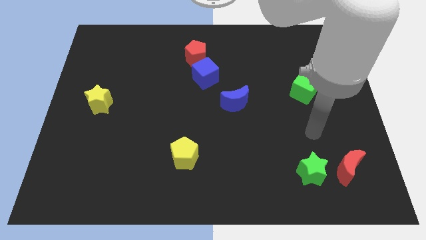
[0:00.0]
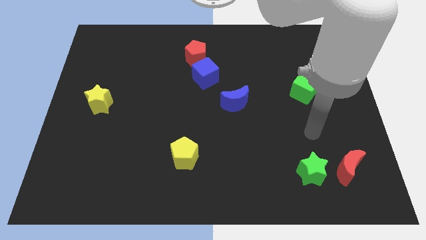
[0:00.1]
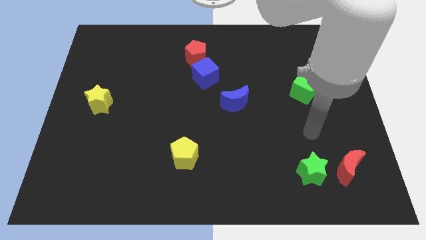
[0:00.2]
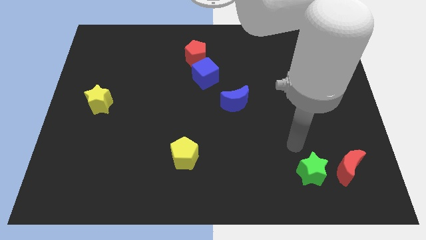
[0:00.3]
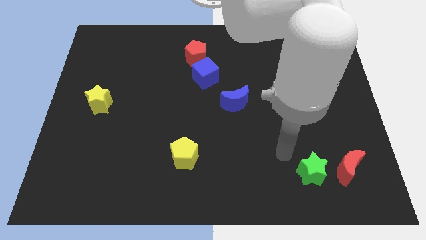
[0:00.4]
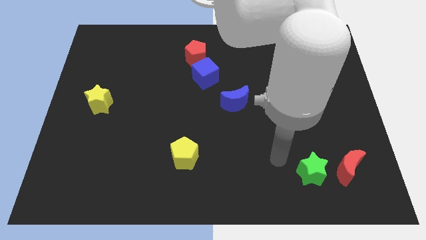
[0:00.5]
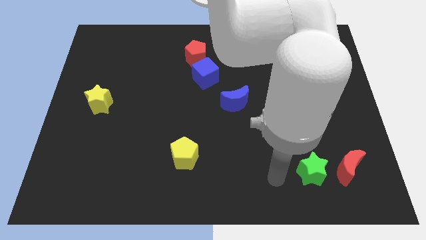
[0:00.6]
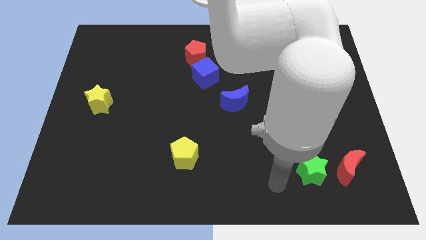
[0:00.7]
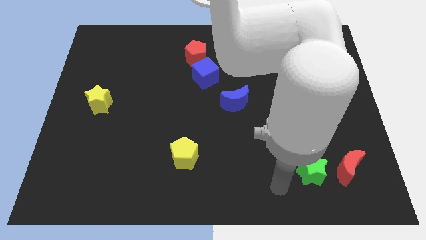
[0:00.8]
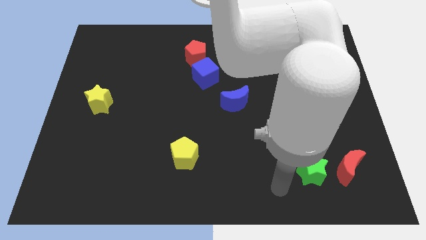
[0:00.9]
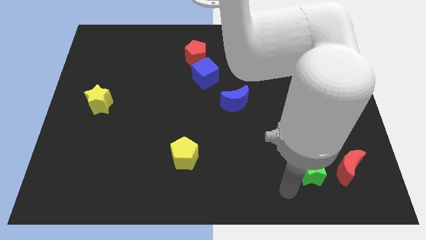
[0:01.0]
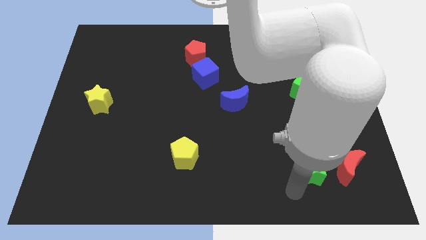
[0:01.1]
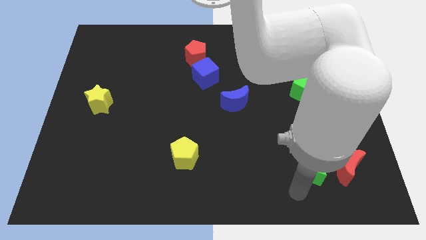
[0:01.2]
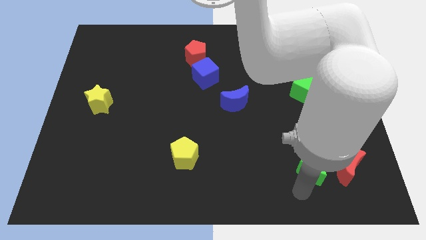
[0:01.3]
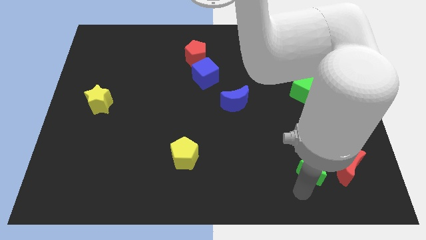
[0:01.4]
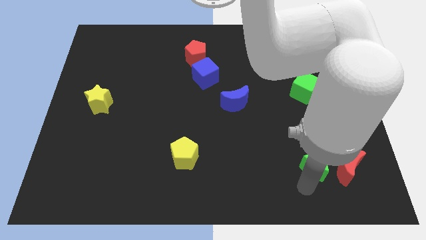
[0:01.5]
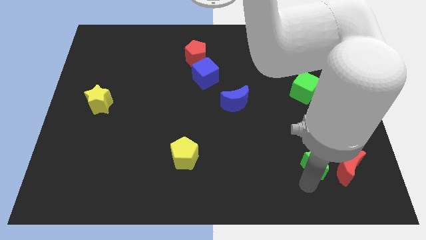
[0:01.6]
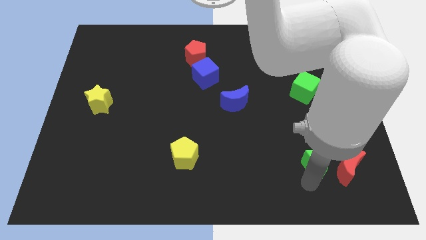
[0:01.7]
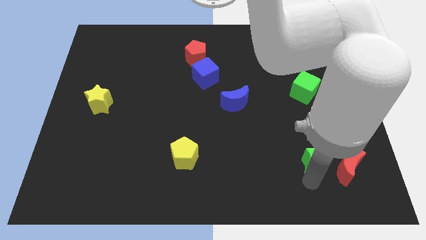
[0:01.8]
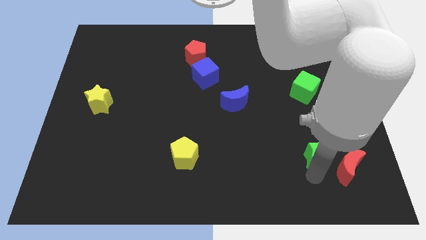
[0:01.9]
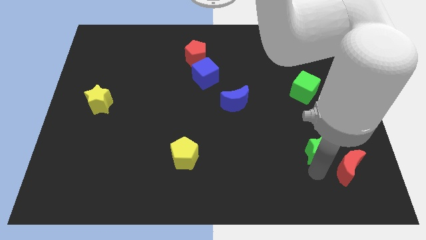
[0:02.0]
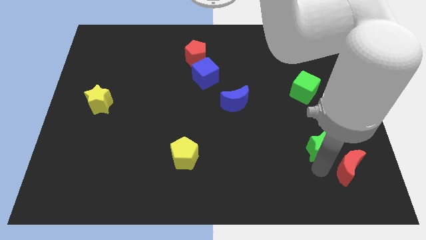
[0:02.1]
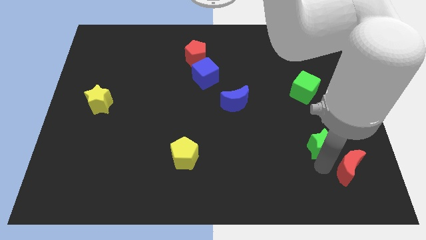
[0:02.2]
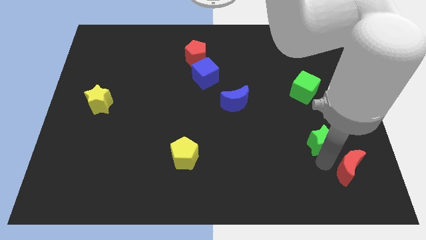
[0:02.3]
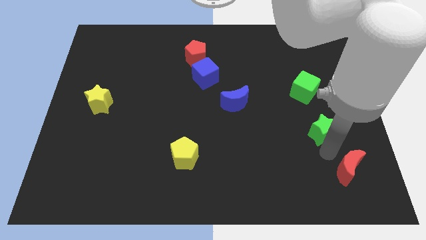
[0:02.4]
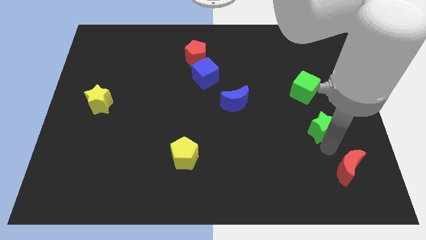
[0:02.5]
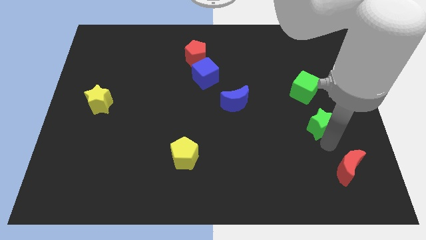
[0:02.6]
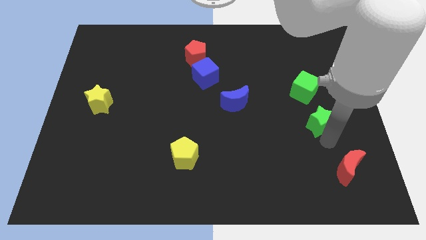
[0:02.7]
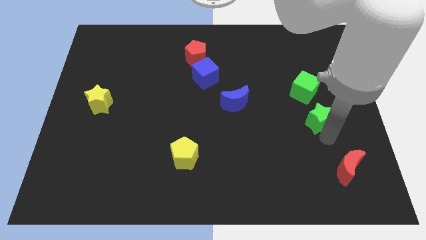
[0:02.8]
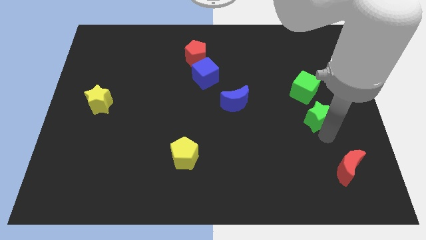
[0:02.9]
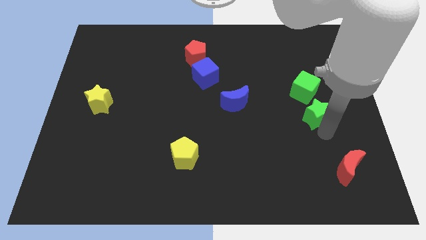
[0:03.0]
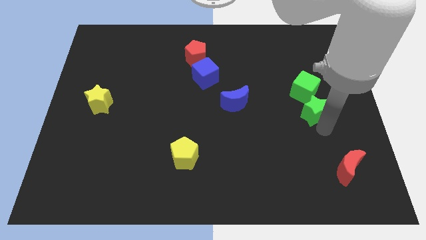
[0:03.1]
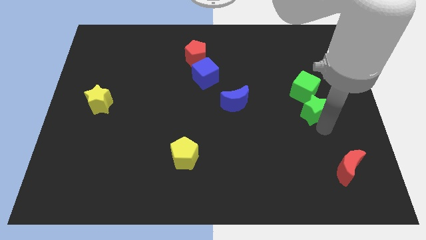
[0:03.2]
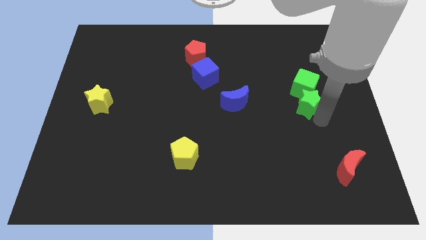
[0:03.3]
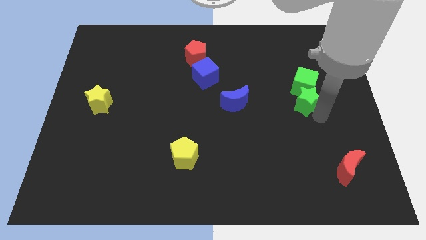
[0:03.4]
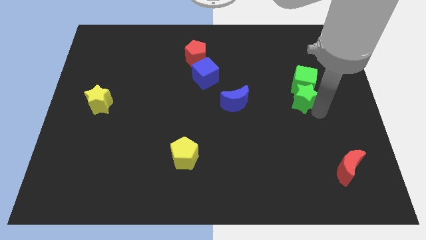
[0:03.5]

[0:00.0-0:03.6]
move the green star close to the green cube

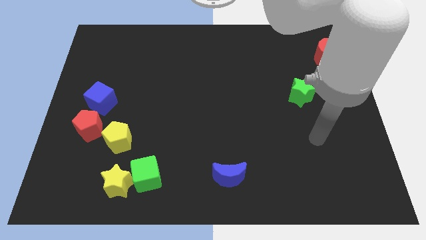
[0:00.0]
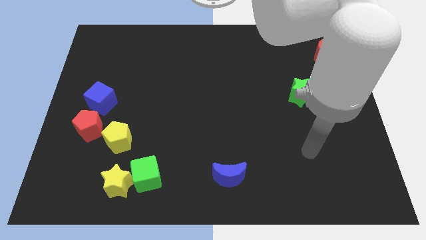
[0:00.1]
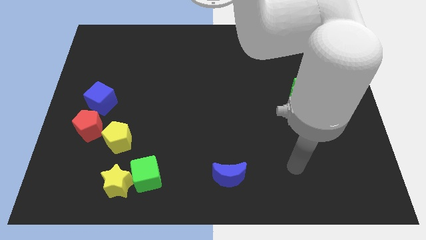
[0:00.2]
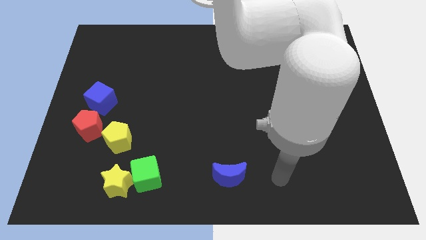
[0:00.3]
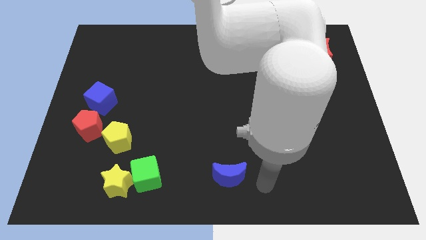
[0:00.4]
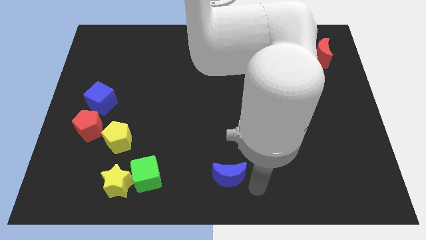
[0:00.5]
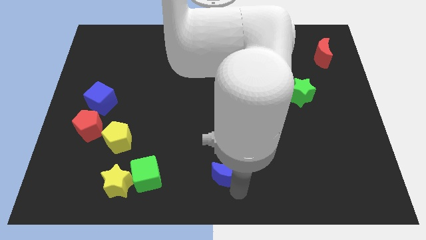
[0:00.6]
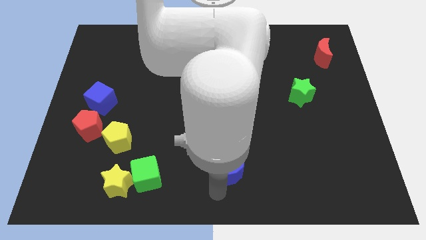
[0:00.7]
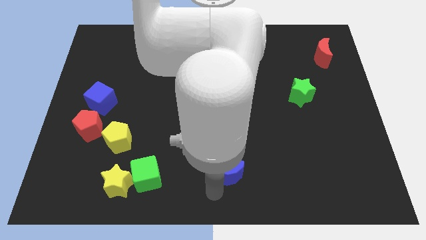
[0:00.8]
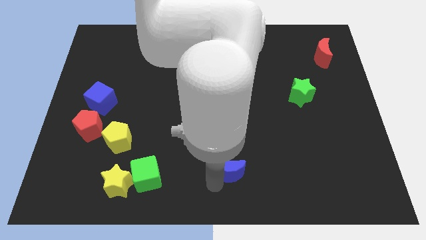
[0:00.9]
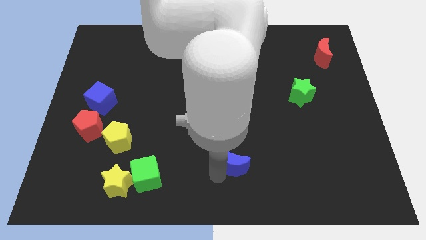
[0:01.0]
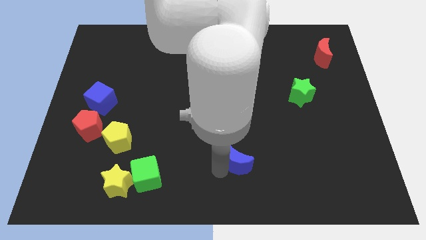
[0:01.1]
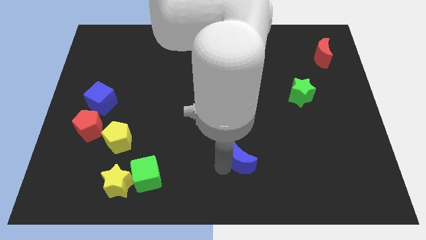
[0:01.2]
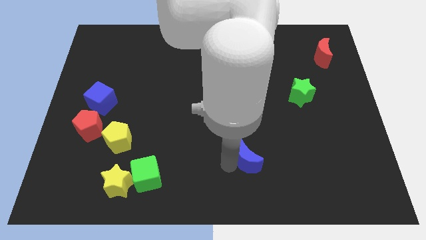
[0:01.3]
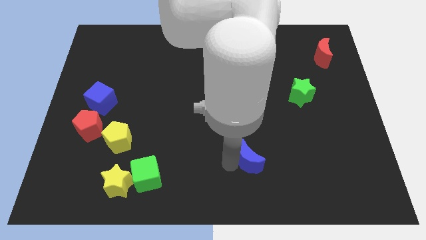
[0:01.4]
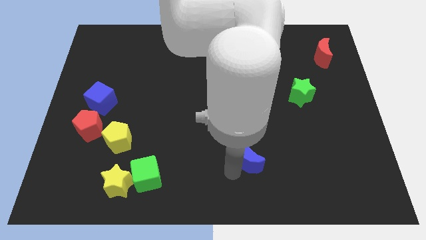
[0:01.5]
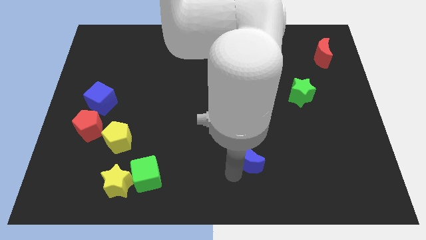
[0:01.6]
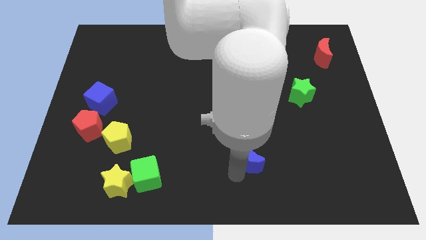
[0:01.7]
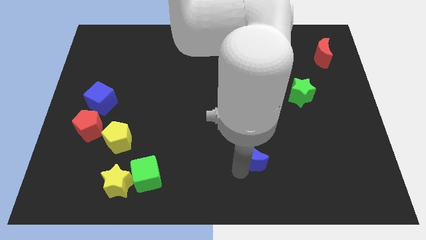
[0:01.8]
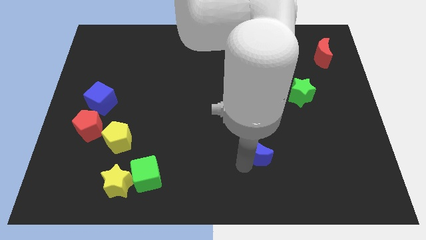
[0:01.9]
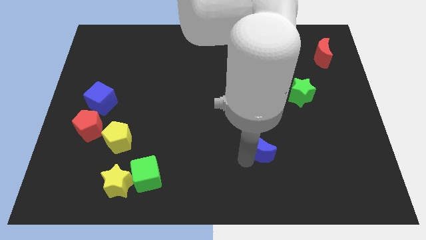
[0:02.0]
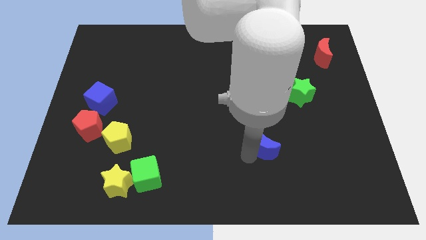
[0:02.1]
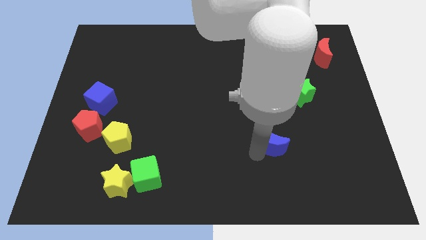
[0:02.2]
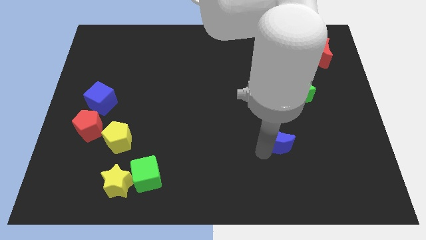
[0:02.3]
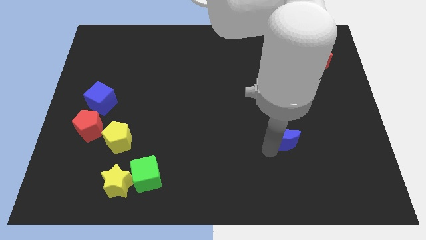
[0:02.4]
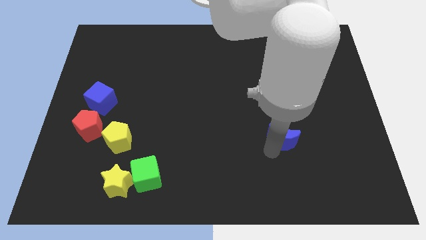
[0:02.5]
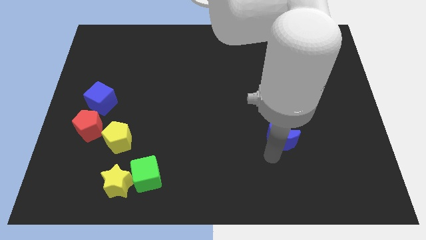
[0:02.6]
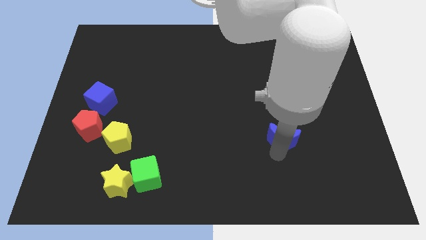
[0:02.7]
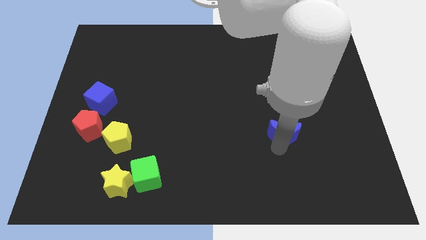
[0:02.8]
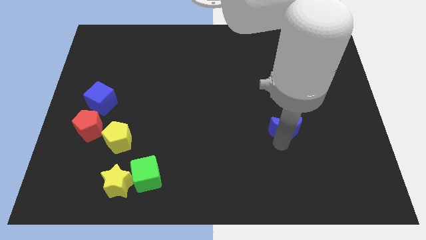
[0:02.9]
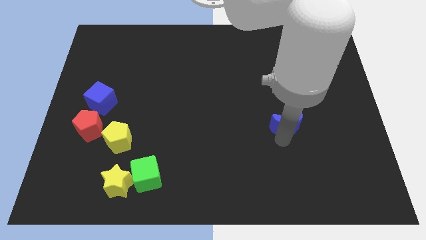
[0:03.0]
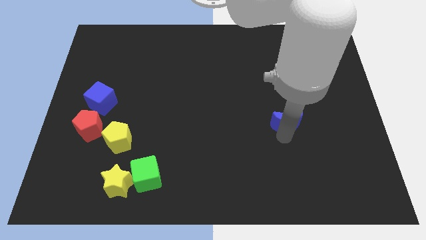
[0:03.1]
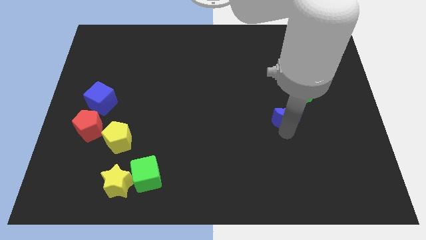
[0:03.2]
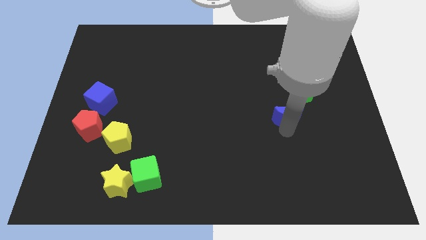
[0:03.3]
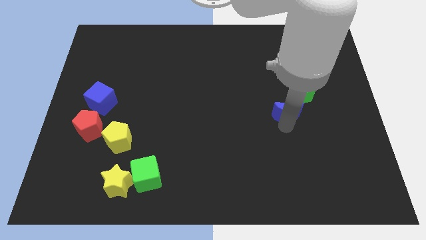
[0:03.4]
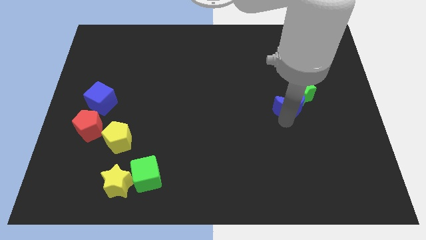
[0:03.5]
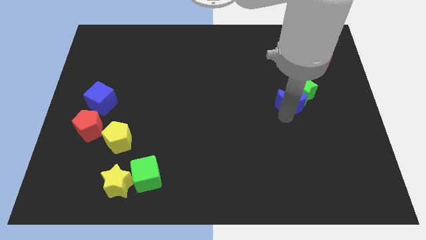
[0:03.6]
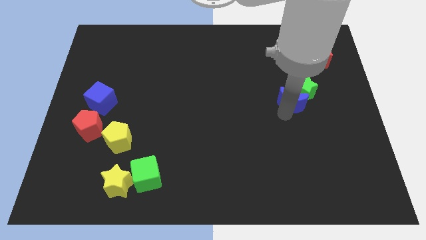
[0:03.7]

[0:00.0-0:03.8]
push the blue moon towards the green star

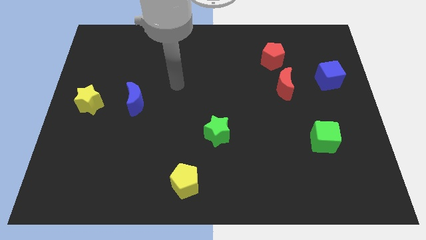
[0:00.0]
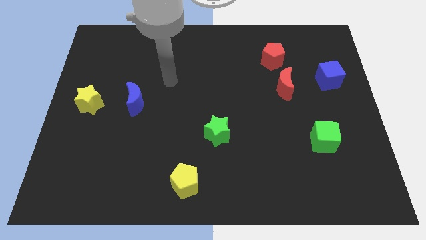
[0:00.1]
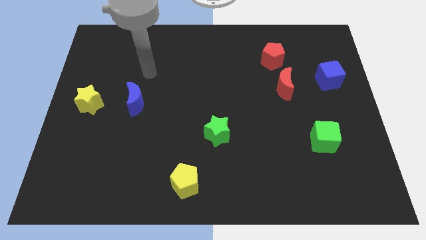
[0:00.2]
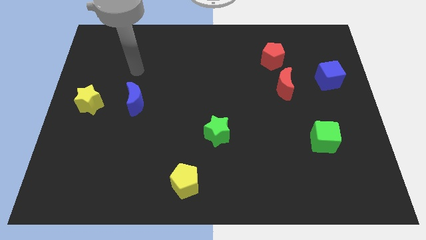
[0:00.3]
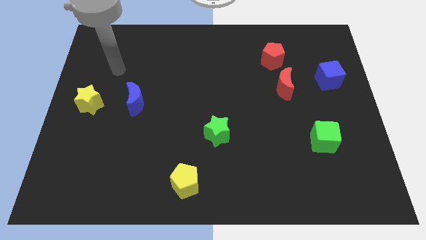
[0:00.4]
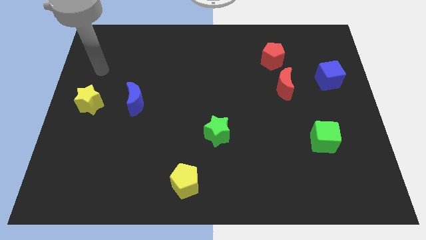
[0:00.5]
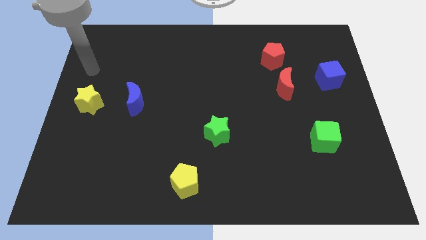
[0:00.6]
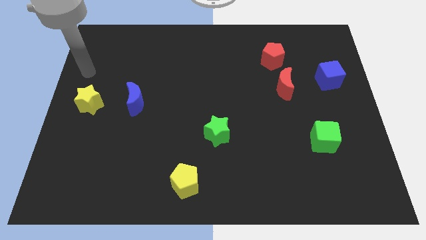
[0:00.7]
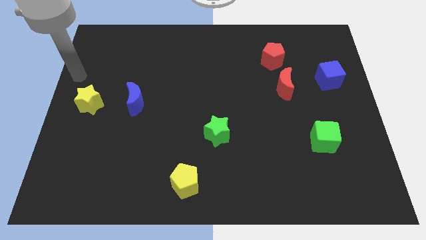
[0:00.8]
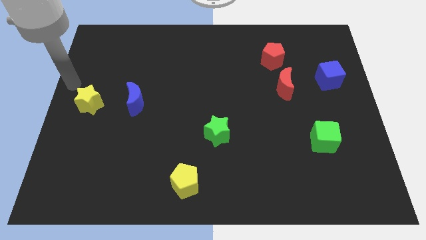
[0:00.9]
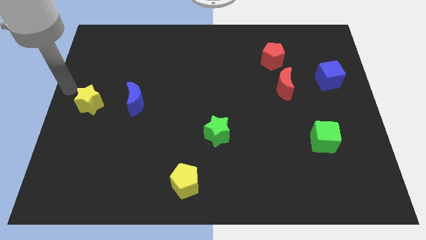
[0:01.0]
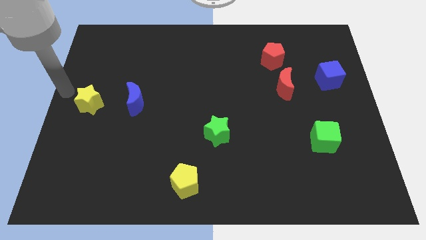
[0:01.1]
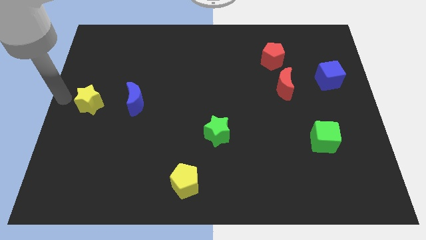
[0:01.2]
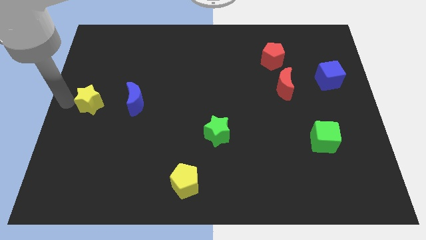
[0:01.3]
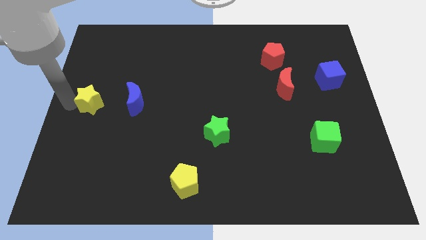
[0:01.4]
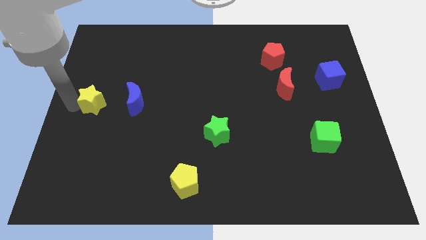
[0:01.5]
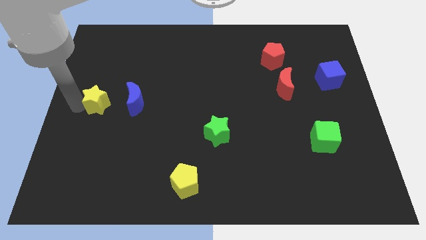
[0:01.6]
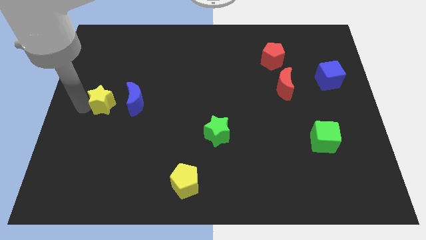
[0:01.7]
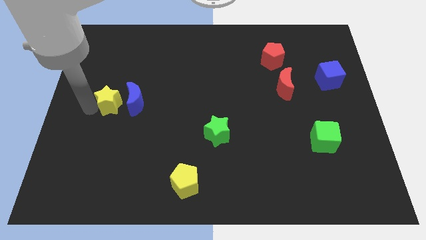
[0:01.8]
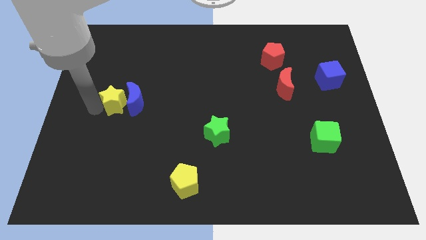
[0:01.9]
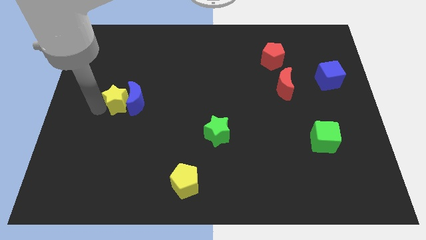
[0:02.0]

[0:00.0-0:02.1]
move the yellow star close to the blue moon
